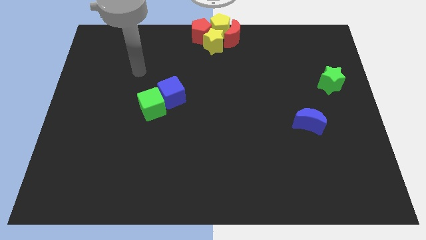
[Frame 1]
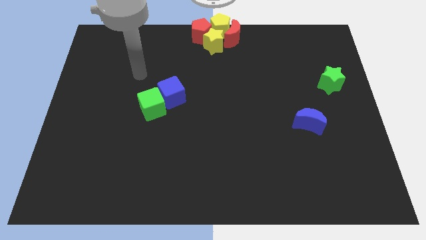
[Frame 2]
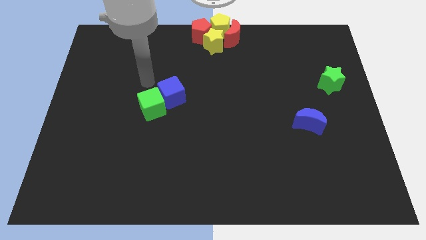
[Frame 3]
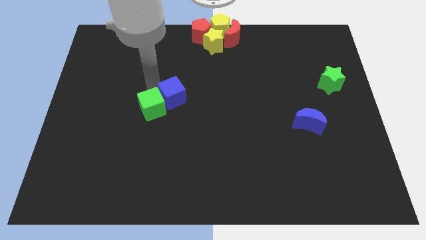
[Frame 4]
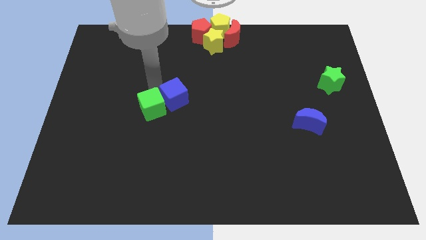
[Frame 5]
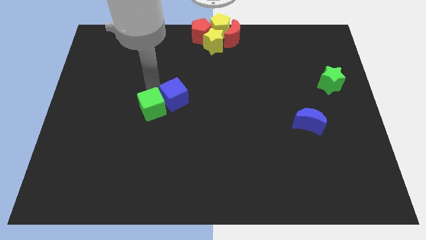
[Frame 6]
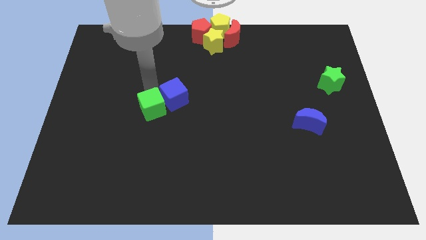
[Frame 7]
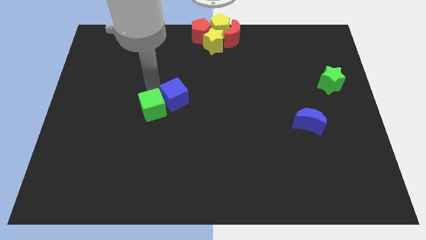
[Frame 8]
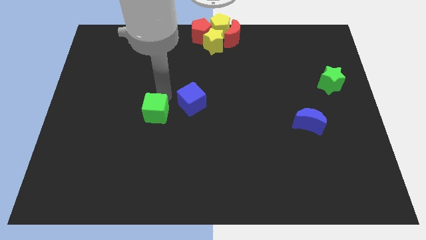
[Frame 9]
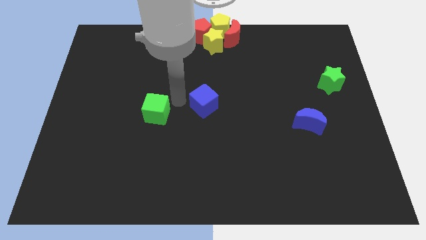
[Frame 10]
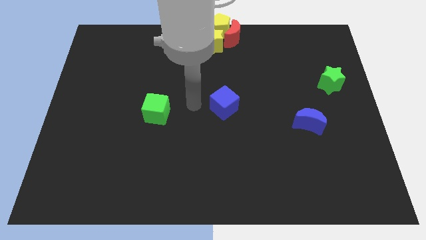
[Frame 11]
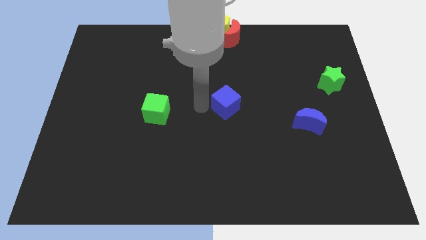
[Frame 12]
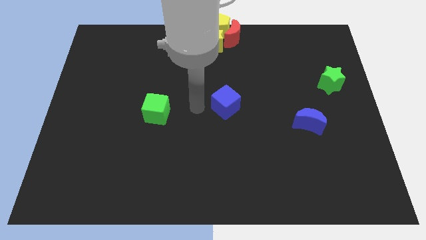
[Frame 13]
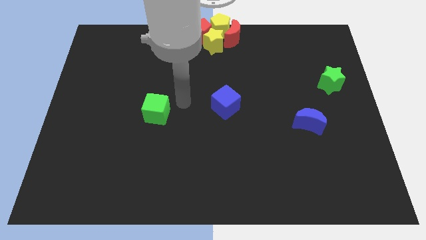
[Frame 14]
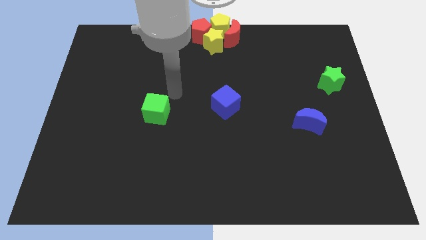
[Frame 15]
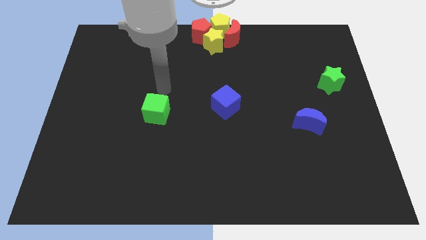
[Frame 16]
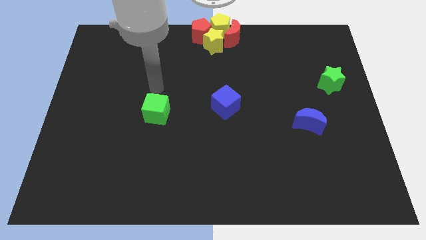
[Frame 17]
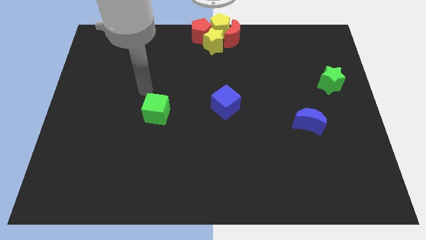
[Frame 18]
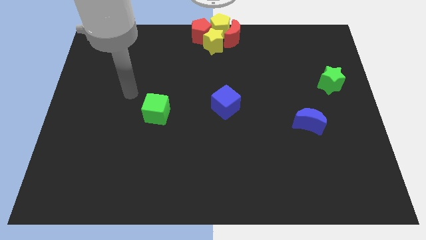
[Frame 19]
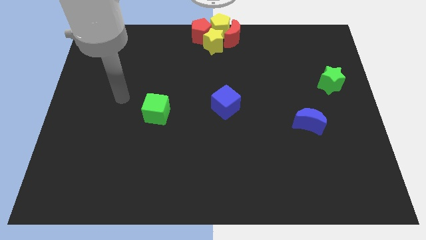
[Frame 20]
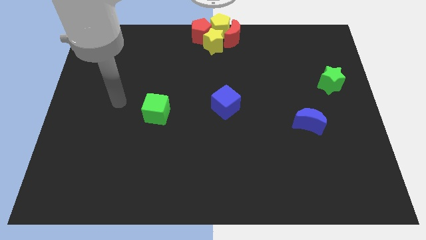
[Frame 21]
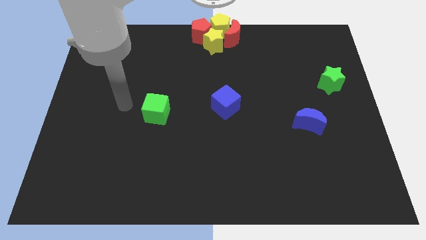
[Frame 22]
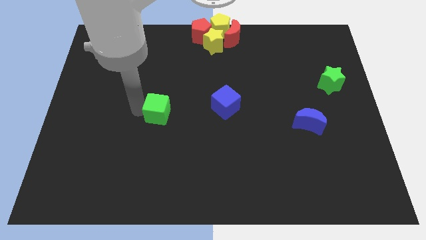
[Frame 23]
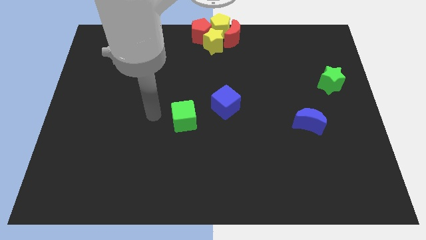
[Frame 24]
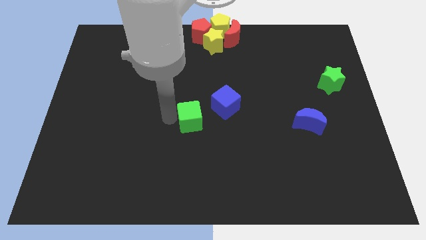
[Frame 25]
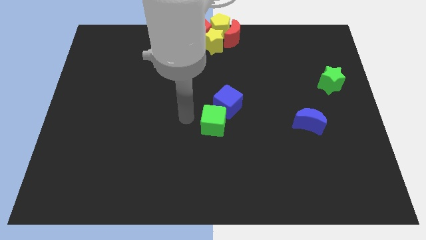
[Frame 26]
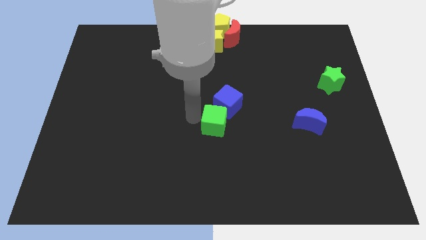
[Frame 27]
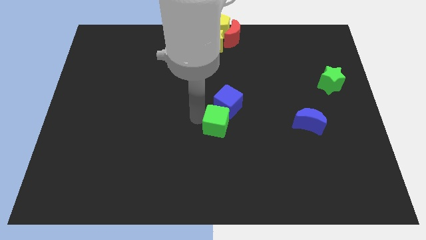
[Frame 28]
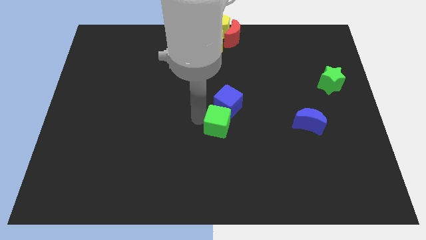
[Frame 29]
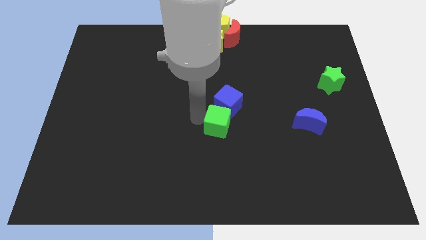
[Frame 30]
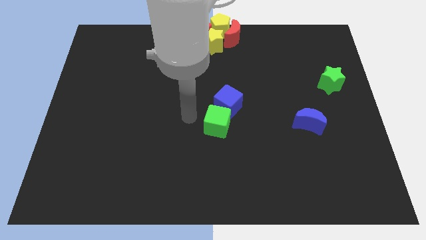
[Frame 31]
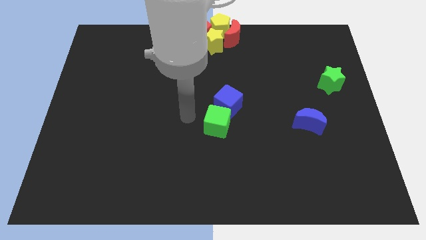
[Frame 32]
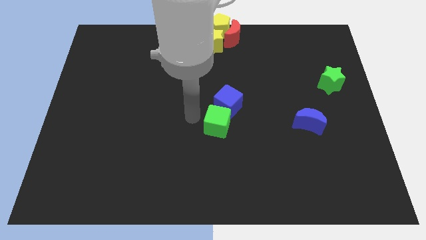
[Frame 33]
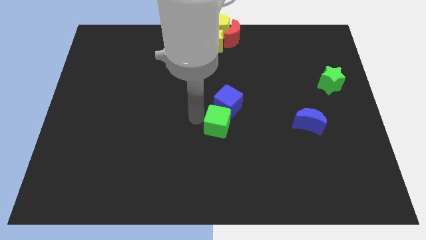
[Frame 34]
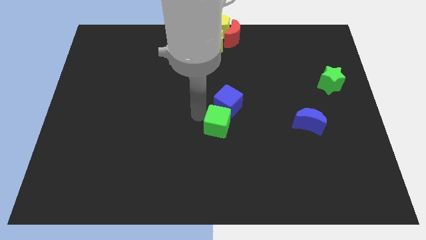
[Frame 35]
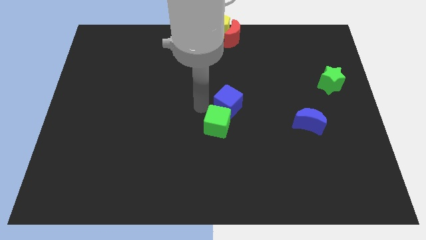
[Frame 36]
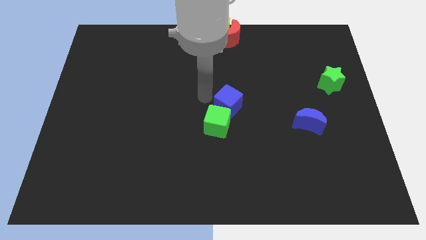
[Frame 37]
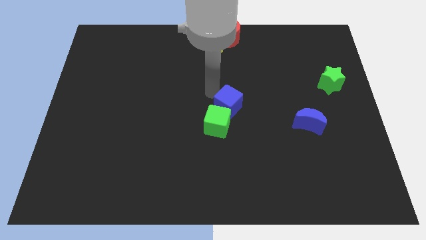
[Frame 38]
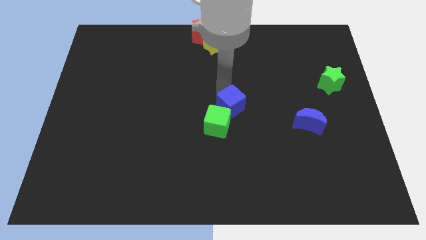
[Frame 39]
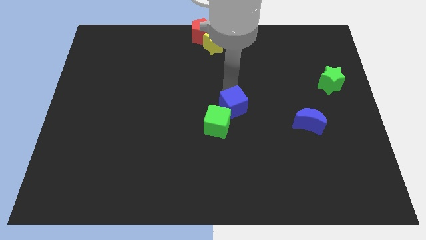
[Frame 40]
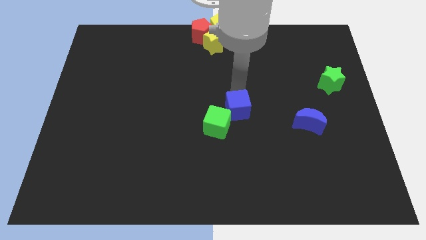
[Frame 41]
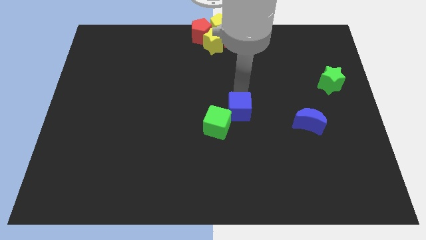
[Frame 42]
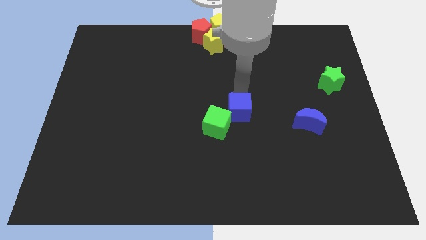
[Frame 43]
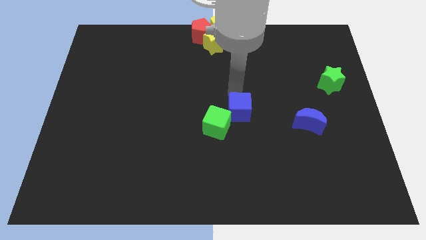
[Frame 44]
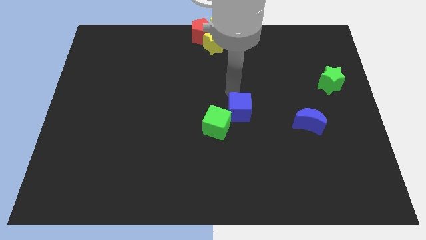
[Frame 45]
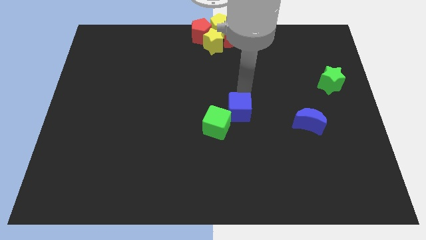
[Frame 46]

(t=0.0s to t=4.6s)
move the blue cube and green cube to the center of the board

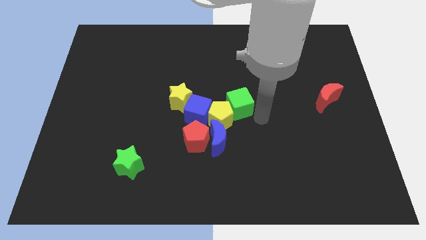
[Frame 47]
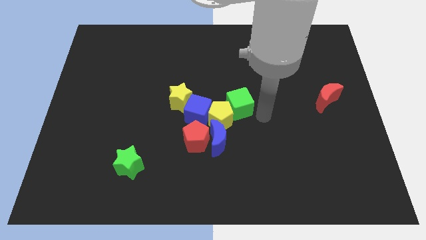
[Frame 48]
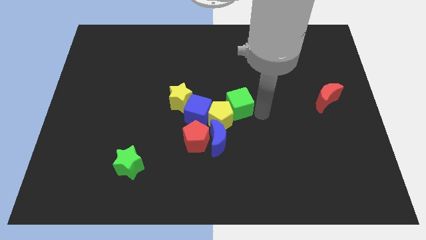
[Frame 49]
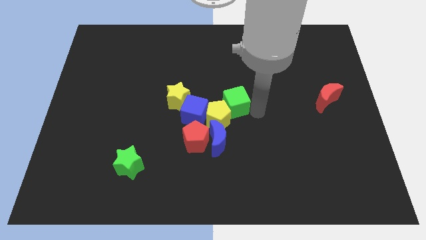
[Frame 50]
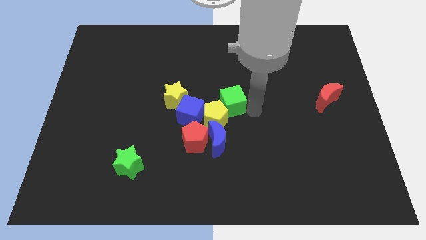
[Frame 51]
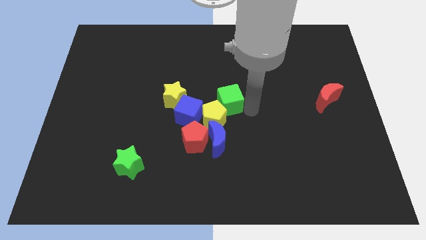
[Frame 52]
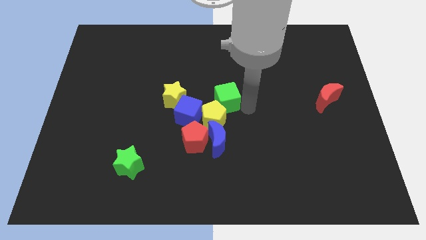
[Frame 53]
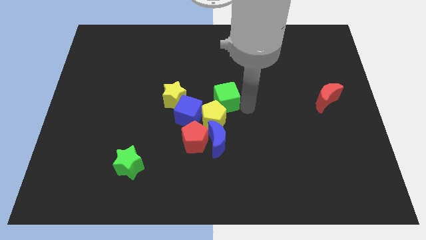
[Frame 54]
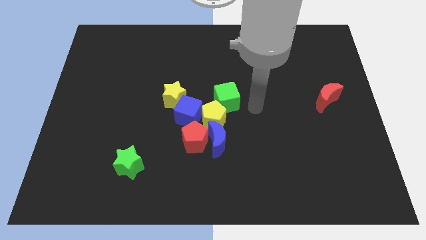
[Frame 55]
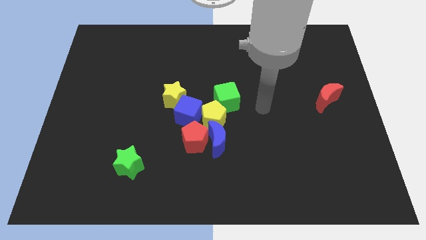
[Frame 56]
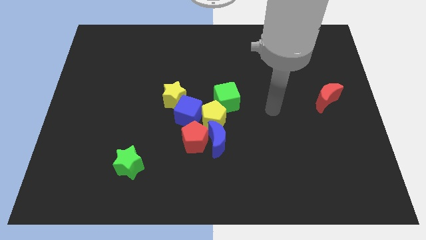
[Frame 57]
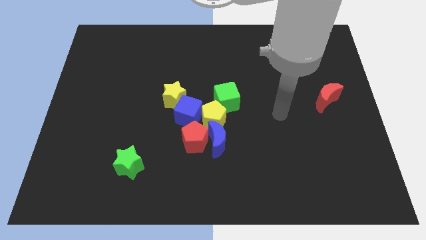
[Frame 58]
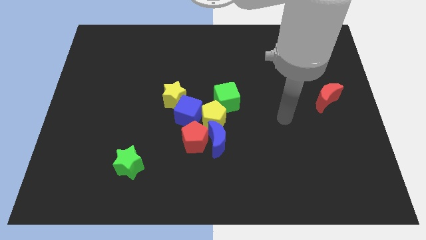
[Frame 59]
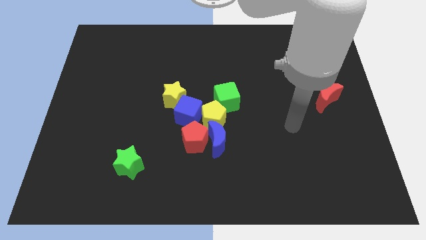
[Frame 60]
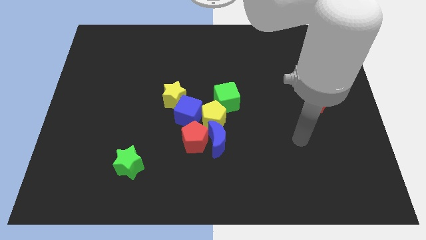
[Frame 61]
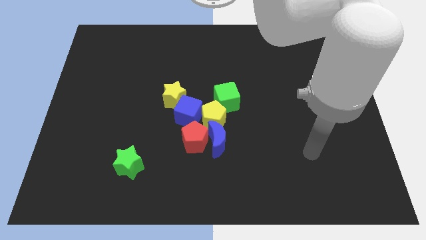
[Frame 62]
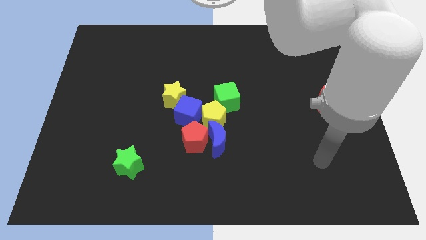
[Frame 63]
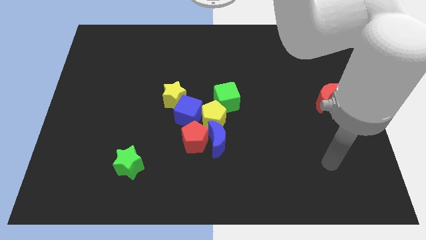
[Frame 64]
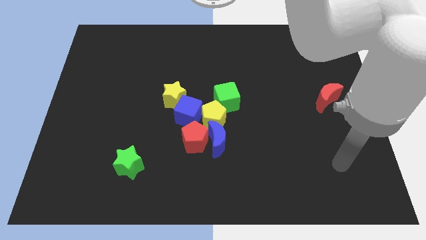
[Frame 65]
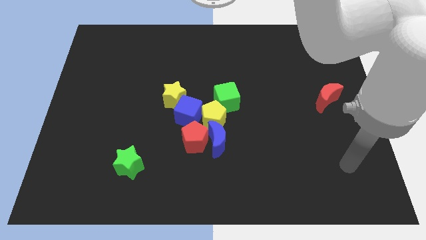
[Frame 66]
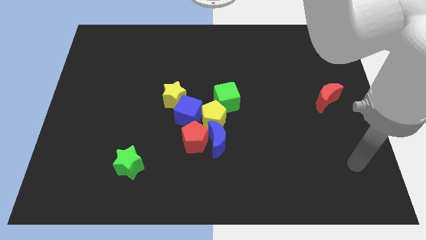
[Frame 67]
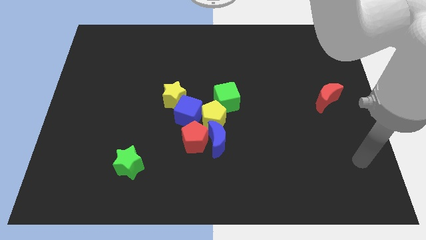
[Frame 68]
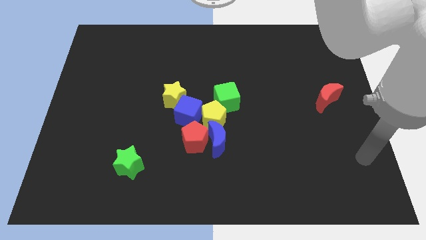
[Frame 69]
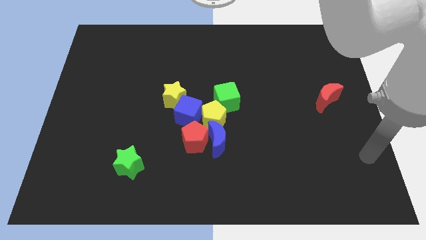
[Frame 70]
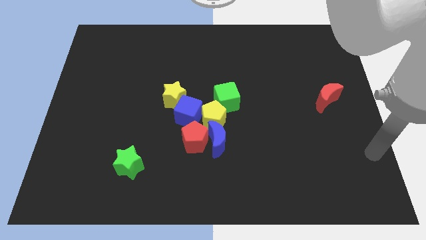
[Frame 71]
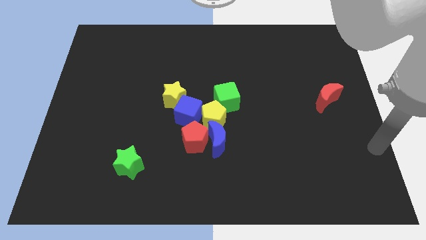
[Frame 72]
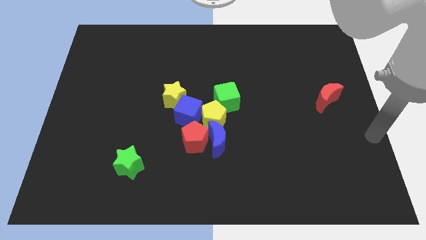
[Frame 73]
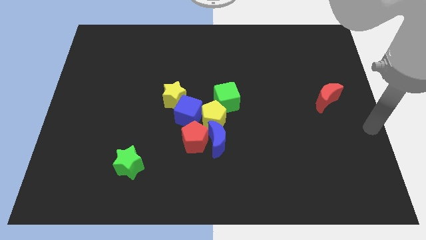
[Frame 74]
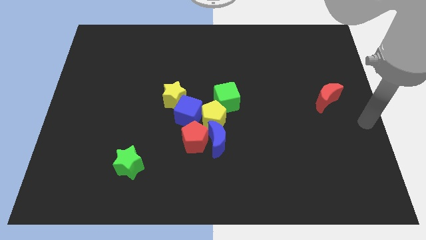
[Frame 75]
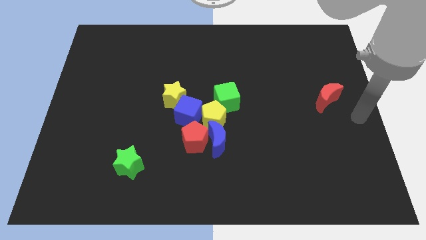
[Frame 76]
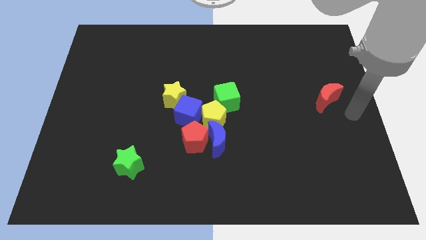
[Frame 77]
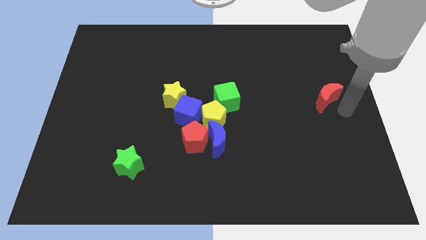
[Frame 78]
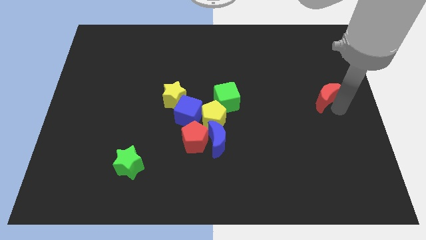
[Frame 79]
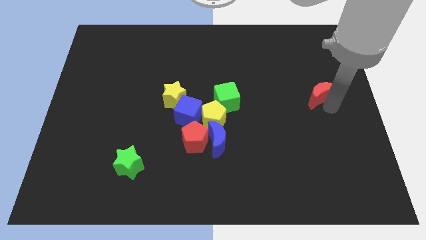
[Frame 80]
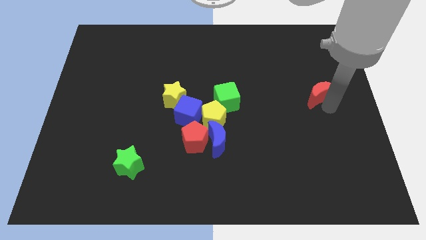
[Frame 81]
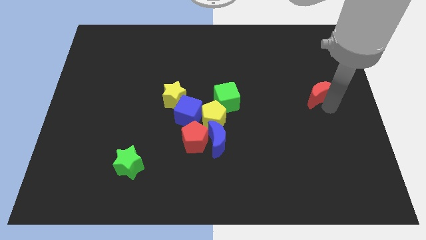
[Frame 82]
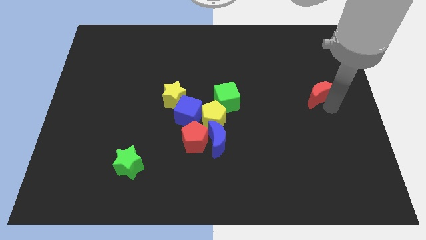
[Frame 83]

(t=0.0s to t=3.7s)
tap red moon slightly

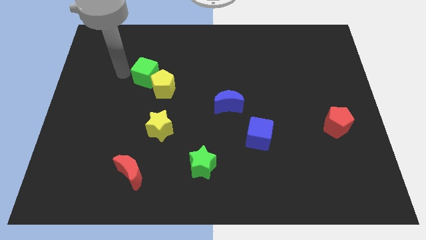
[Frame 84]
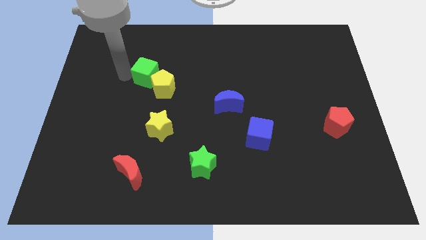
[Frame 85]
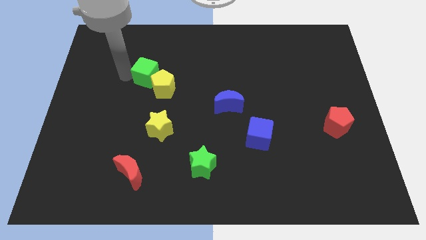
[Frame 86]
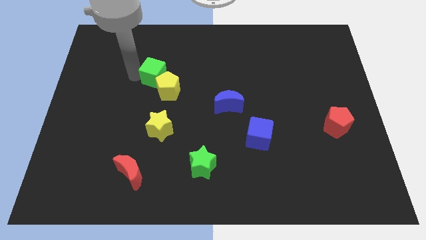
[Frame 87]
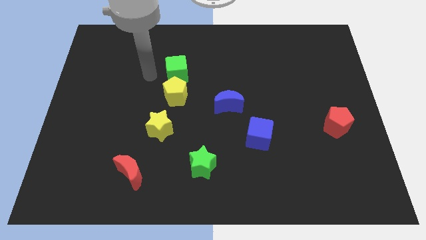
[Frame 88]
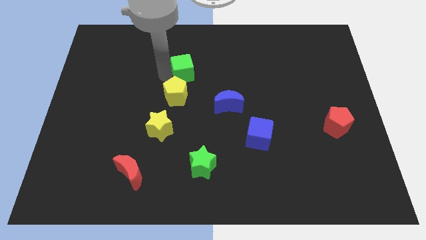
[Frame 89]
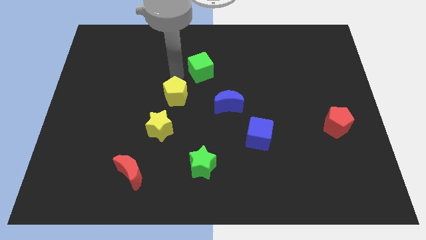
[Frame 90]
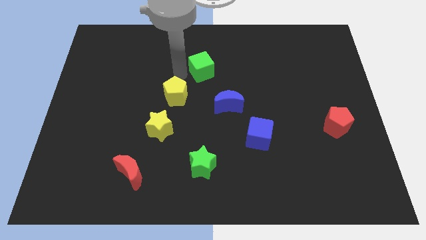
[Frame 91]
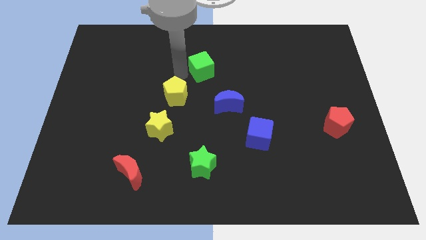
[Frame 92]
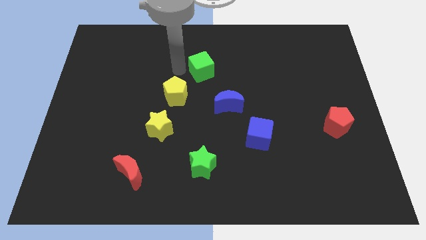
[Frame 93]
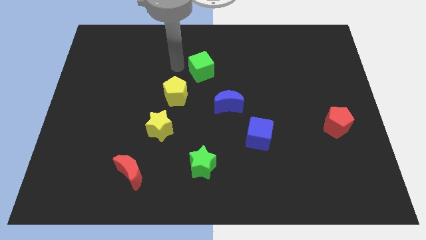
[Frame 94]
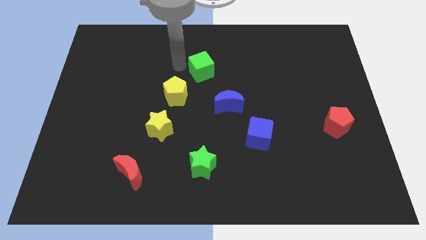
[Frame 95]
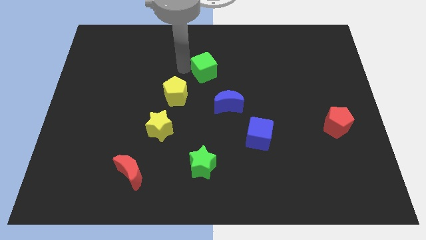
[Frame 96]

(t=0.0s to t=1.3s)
separate the green cube from yellow pentagon
